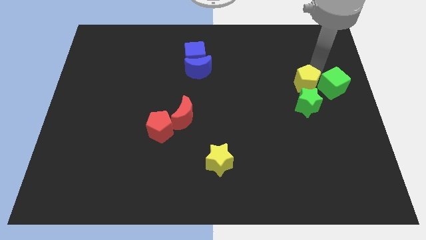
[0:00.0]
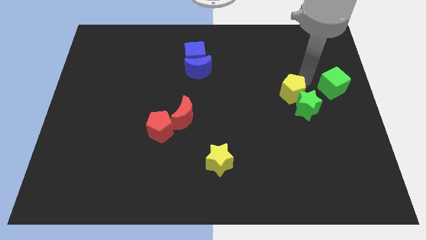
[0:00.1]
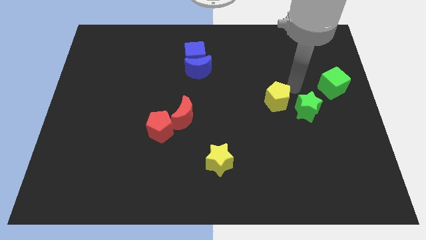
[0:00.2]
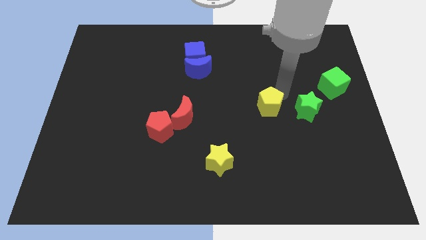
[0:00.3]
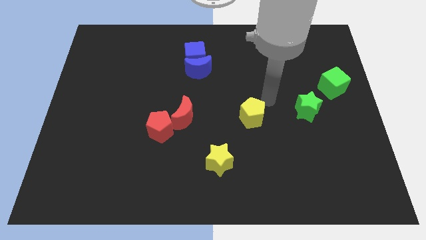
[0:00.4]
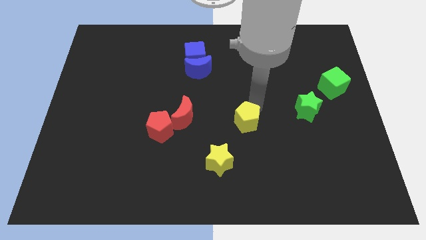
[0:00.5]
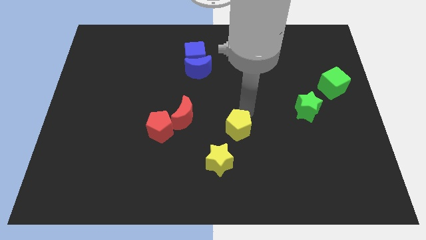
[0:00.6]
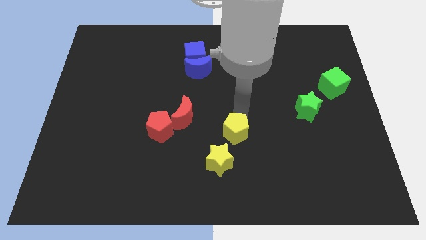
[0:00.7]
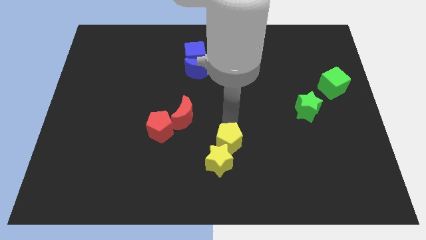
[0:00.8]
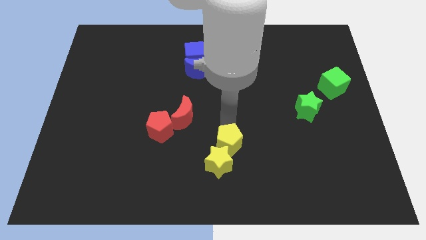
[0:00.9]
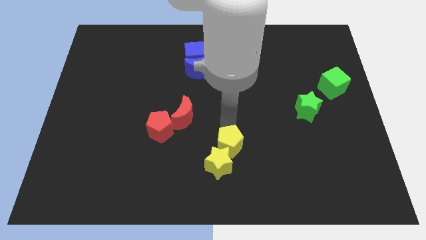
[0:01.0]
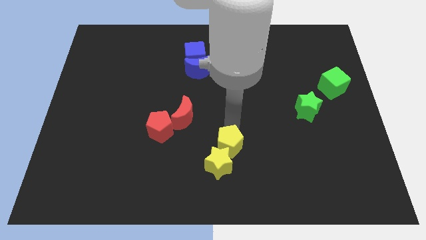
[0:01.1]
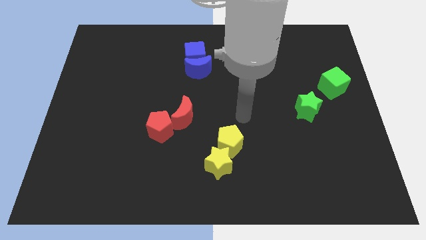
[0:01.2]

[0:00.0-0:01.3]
push the yellow pentagon into the yellow star

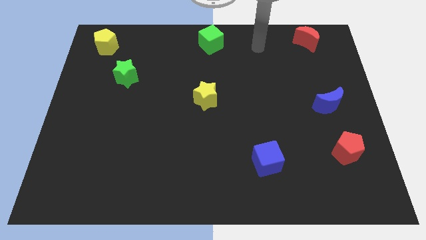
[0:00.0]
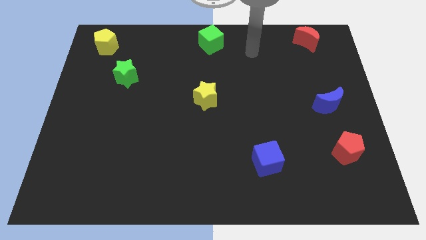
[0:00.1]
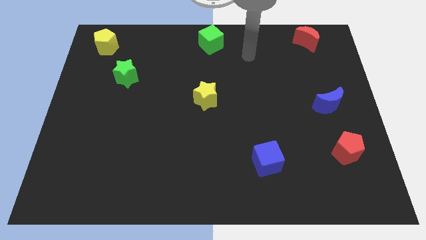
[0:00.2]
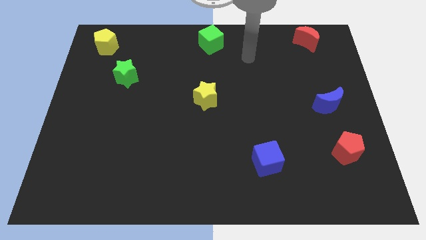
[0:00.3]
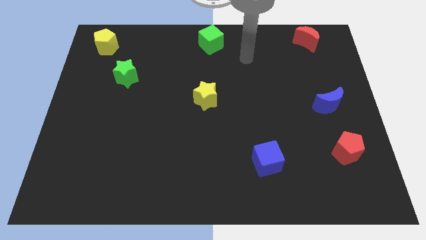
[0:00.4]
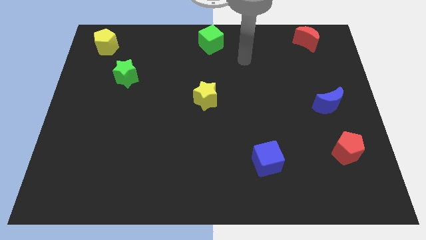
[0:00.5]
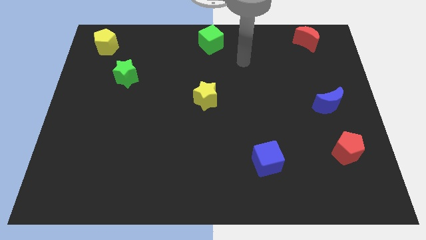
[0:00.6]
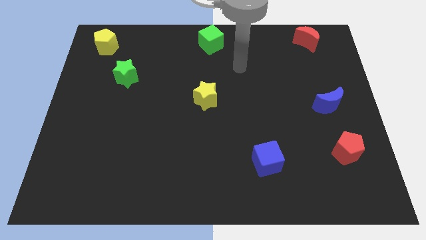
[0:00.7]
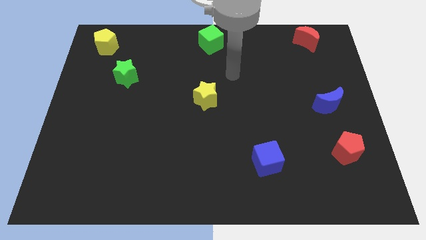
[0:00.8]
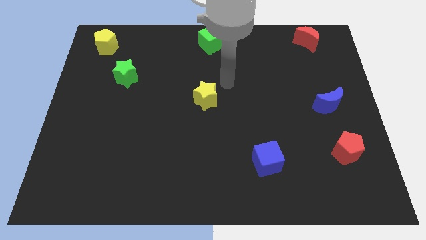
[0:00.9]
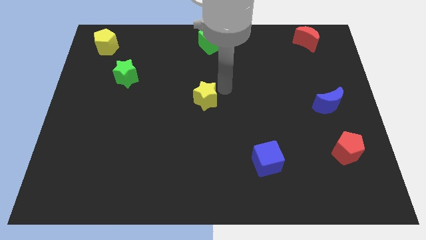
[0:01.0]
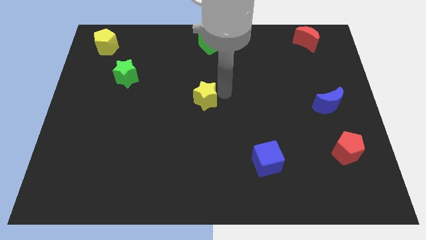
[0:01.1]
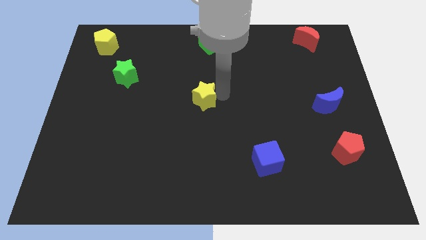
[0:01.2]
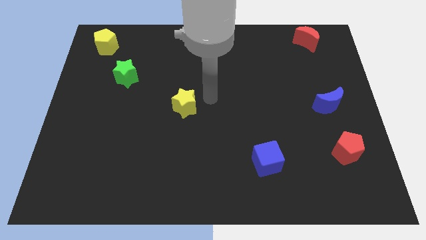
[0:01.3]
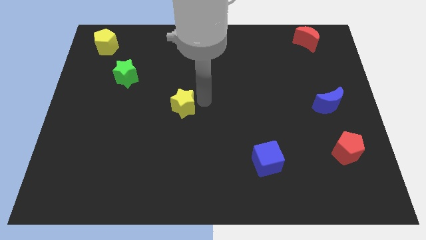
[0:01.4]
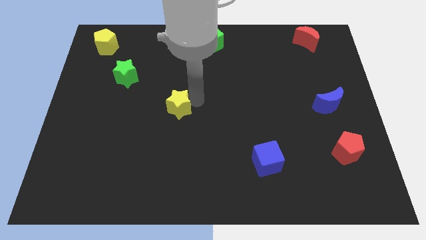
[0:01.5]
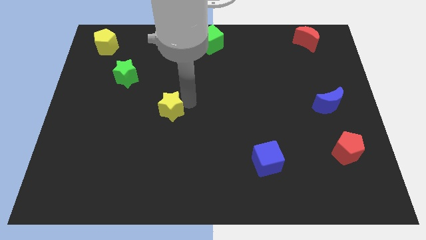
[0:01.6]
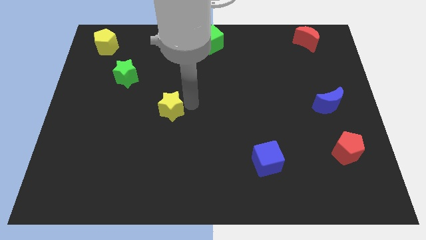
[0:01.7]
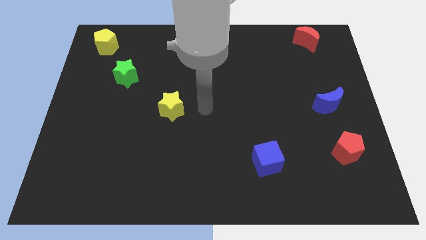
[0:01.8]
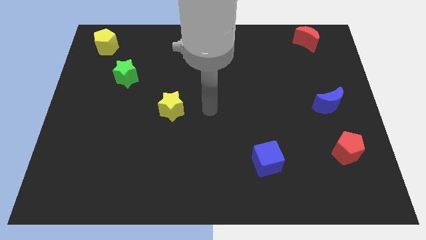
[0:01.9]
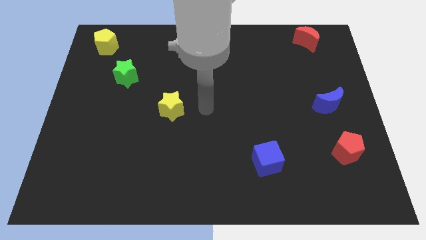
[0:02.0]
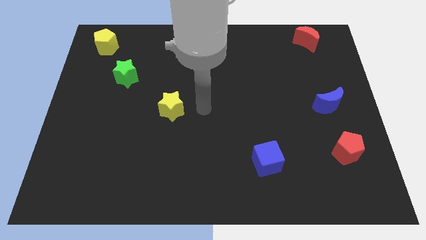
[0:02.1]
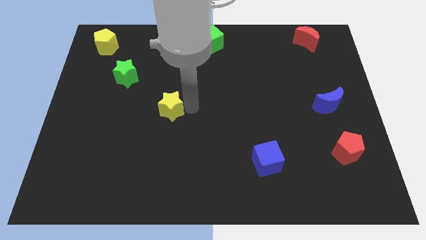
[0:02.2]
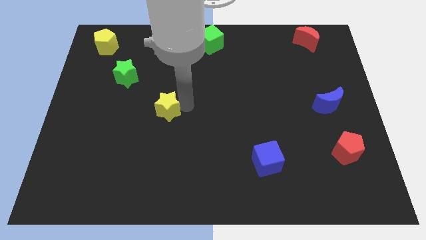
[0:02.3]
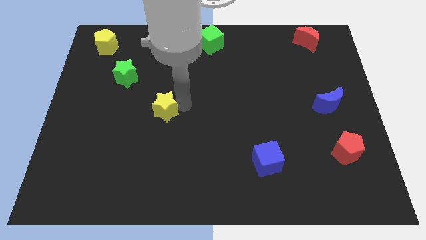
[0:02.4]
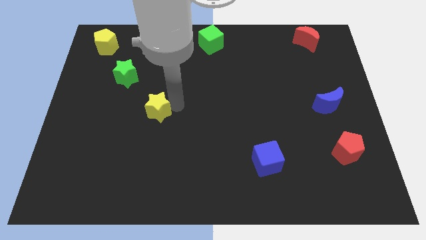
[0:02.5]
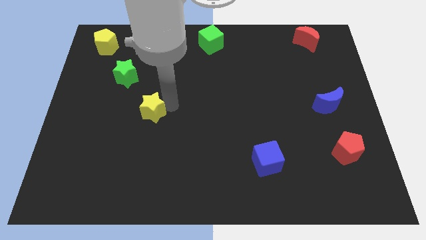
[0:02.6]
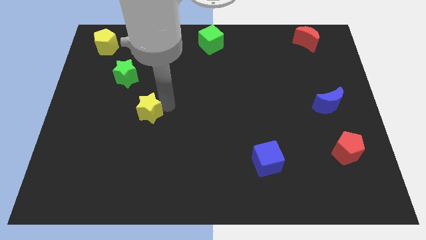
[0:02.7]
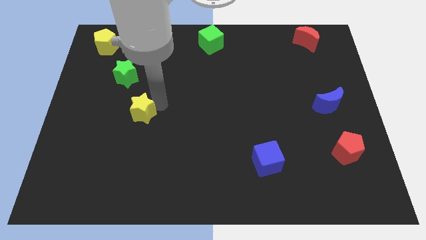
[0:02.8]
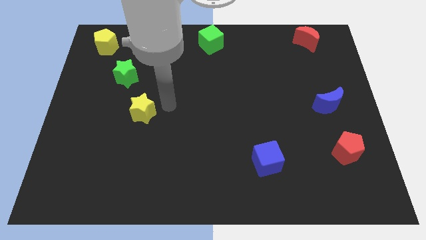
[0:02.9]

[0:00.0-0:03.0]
move the yellow star diagonally to the green star

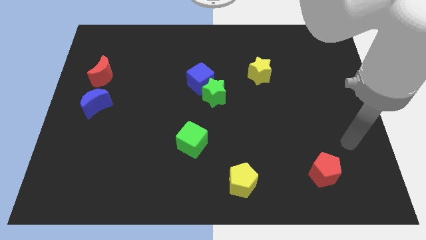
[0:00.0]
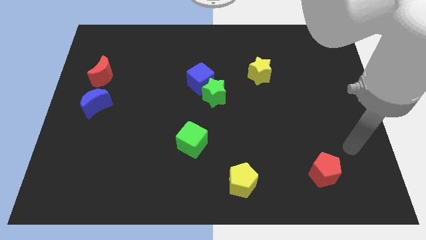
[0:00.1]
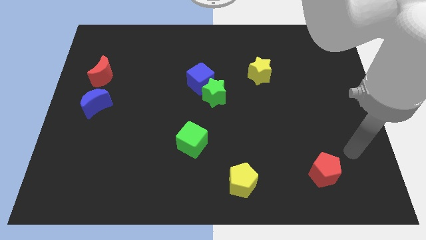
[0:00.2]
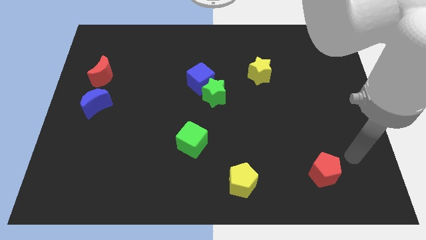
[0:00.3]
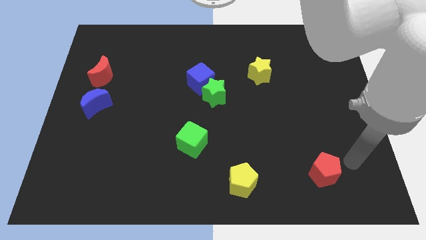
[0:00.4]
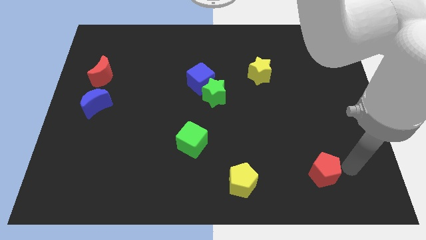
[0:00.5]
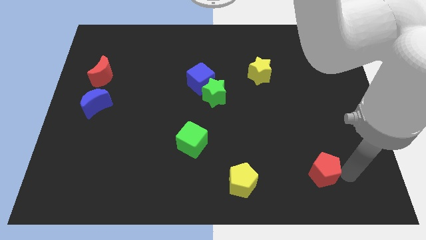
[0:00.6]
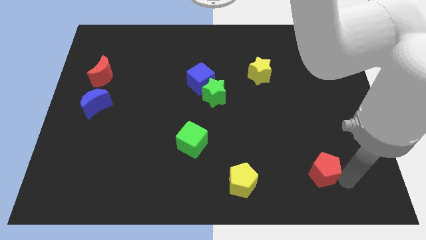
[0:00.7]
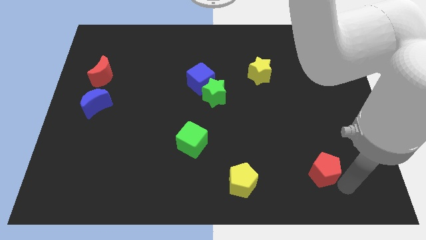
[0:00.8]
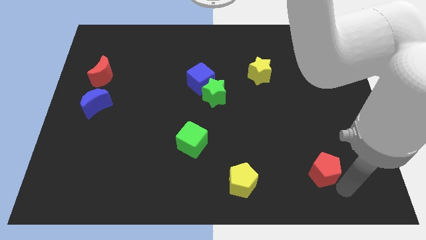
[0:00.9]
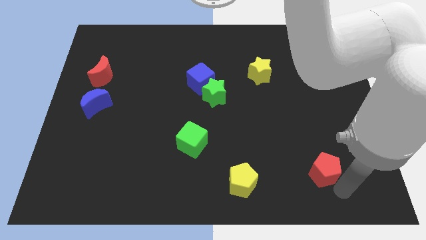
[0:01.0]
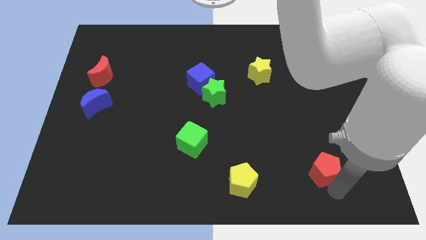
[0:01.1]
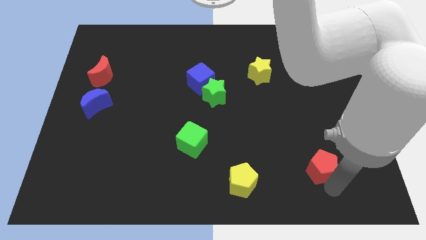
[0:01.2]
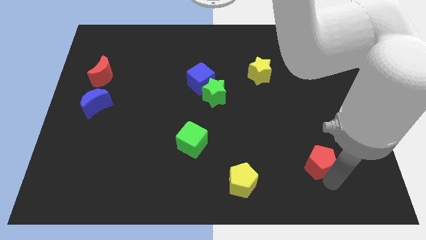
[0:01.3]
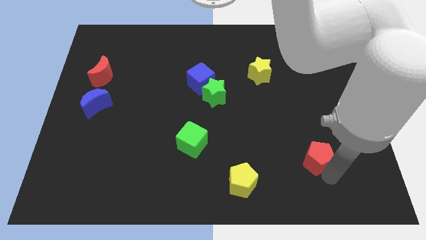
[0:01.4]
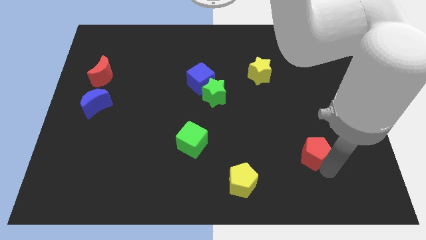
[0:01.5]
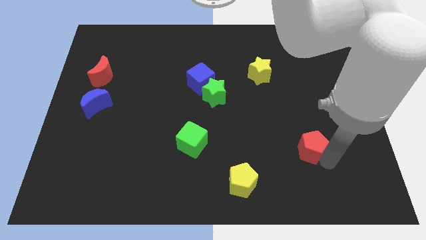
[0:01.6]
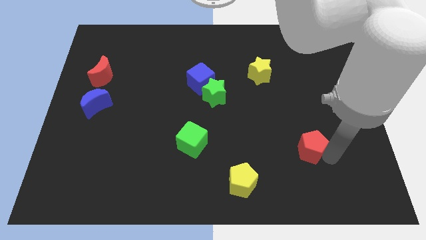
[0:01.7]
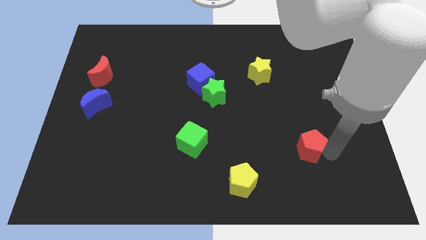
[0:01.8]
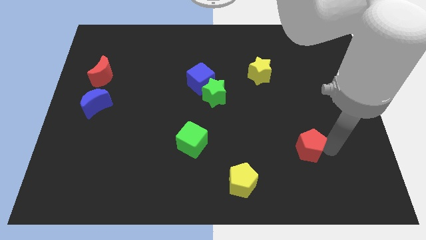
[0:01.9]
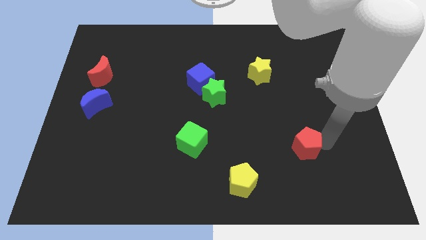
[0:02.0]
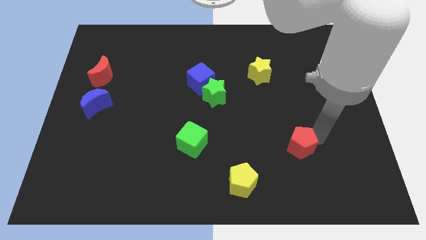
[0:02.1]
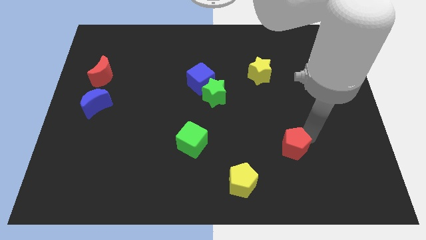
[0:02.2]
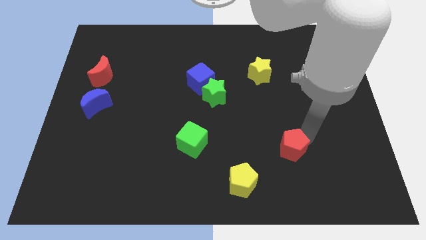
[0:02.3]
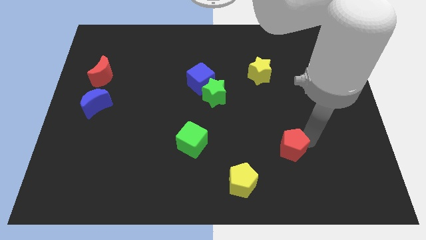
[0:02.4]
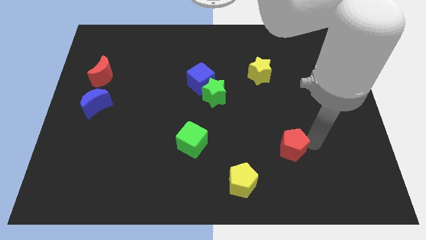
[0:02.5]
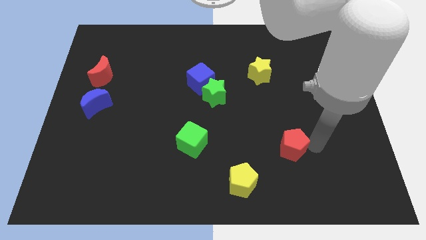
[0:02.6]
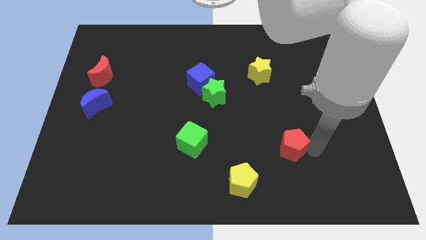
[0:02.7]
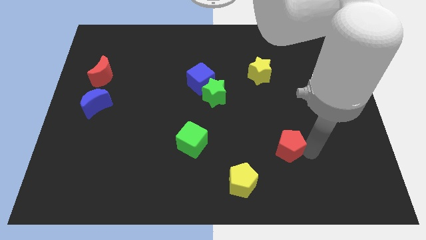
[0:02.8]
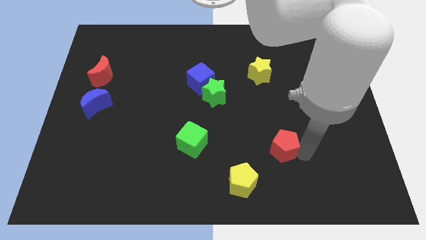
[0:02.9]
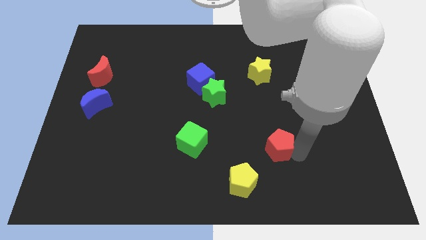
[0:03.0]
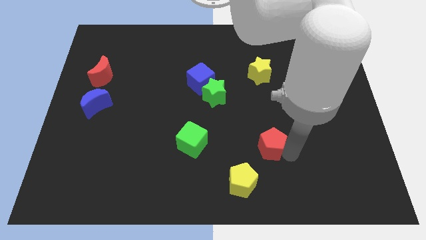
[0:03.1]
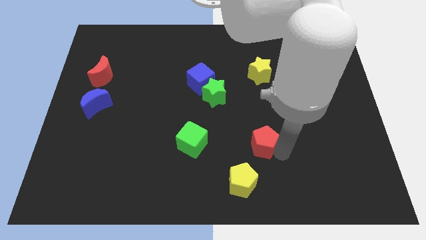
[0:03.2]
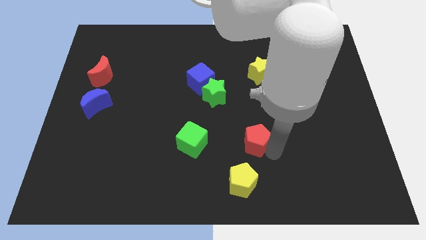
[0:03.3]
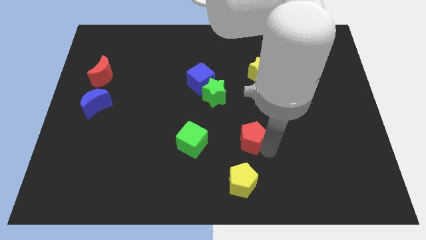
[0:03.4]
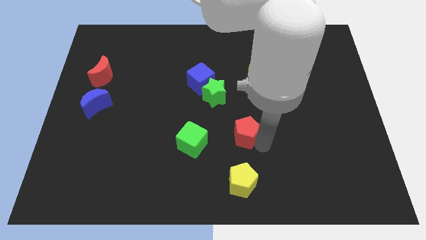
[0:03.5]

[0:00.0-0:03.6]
move red pentagon above yellow pentagon

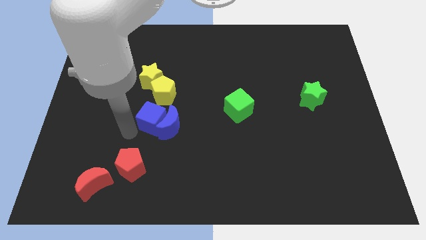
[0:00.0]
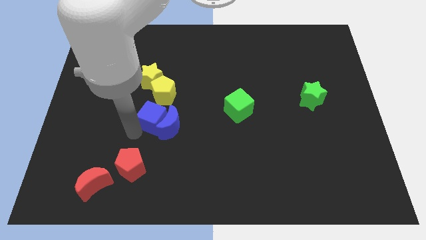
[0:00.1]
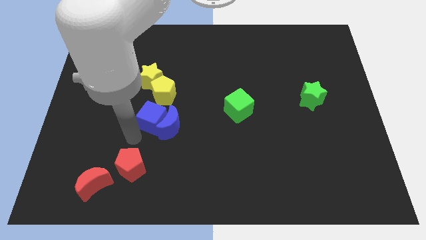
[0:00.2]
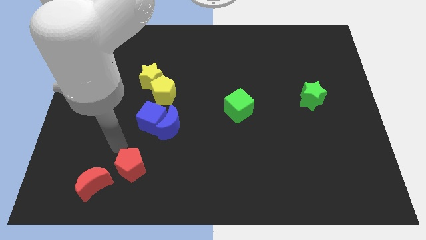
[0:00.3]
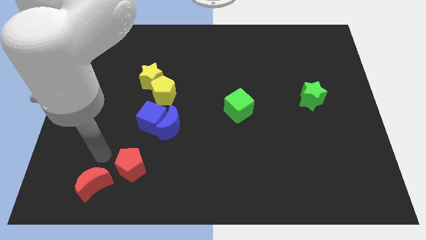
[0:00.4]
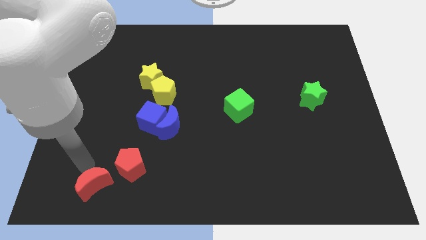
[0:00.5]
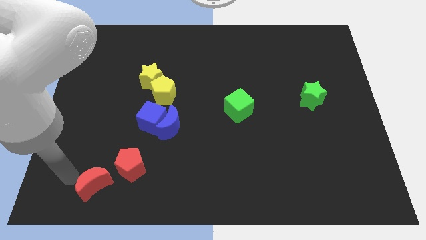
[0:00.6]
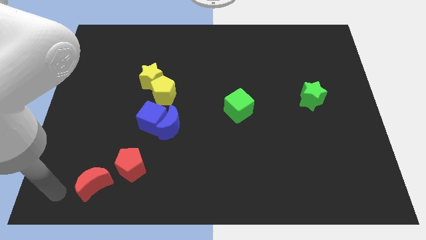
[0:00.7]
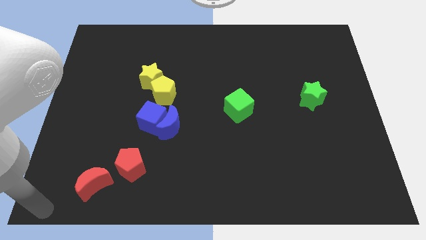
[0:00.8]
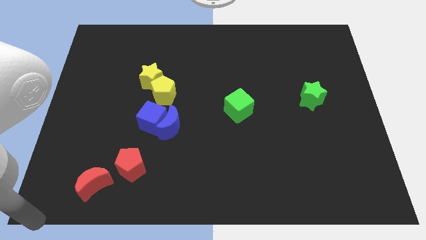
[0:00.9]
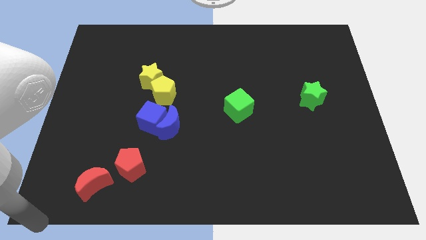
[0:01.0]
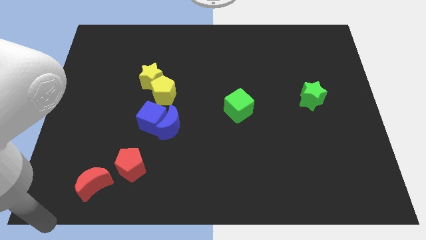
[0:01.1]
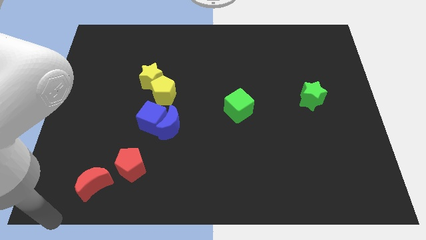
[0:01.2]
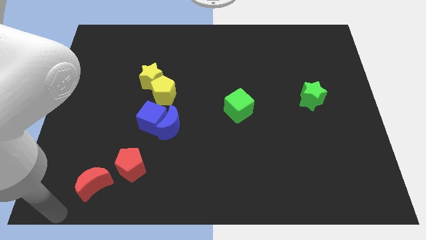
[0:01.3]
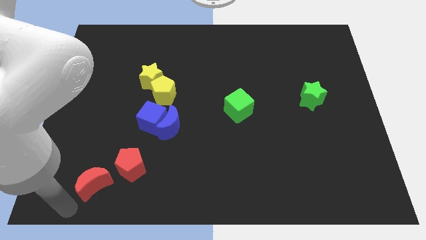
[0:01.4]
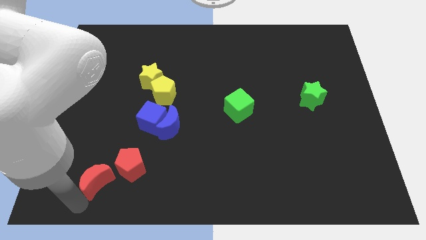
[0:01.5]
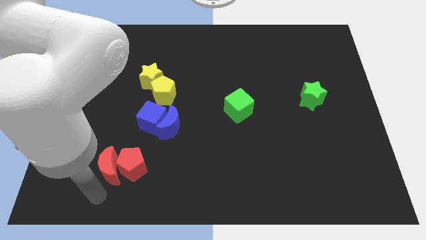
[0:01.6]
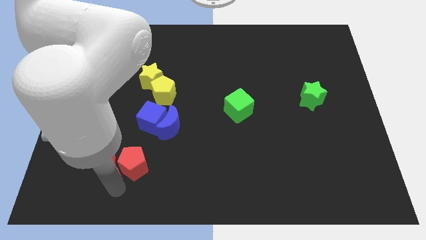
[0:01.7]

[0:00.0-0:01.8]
push the red crescent into the red pentagon
